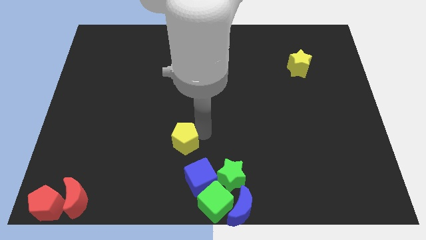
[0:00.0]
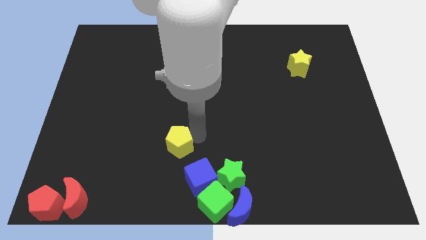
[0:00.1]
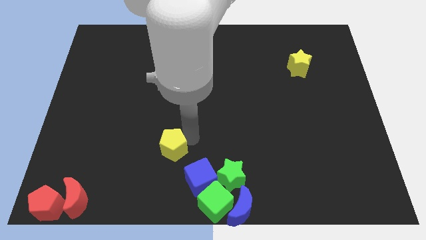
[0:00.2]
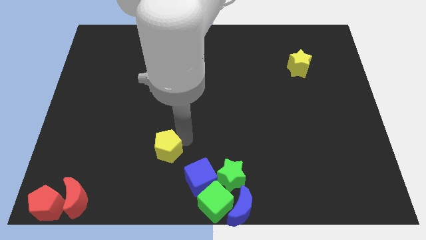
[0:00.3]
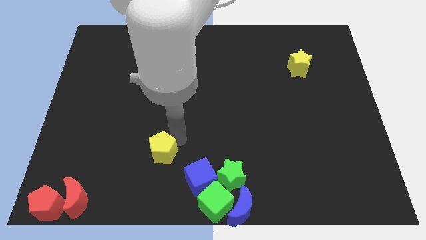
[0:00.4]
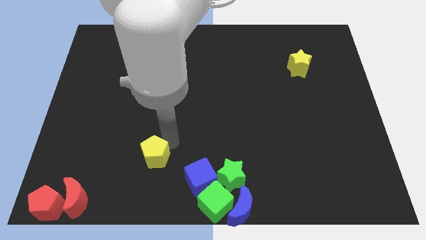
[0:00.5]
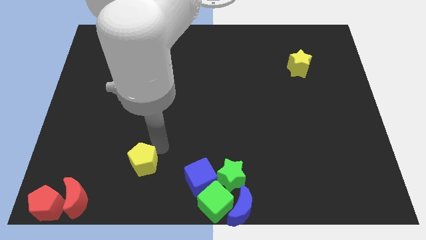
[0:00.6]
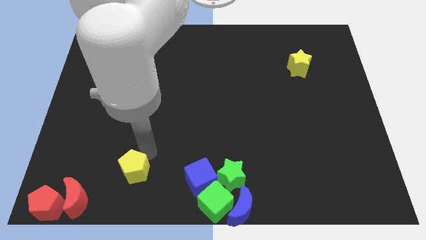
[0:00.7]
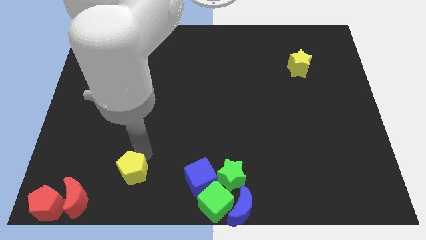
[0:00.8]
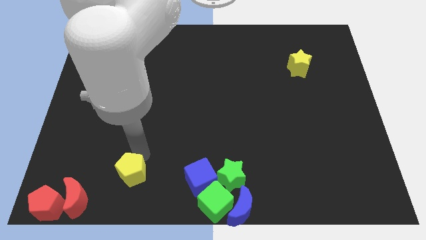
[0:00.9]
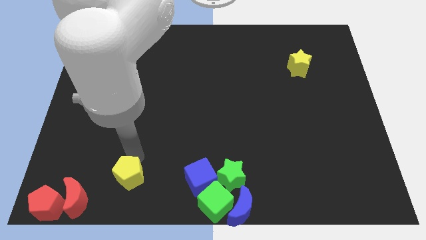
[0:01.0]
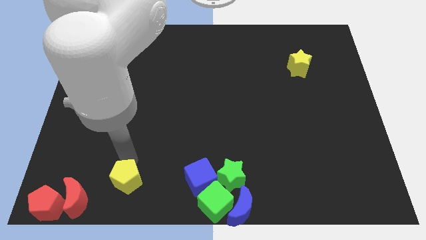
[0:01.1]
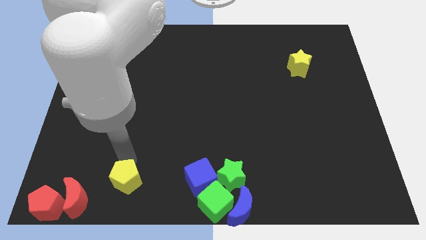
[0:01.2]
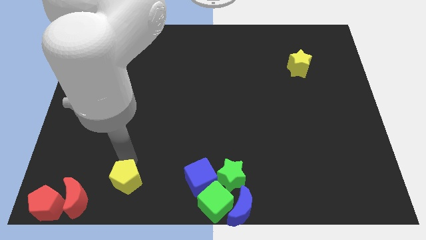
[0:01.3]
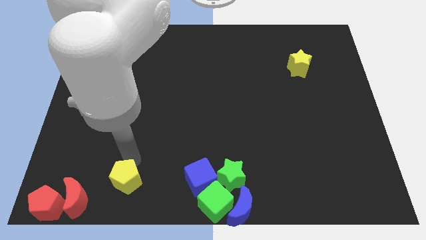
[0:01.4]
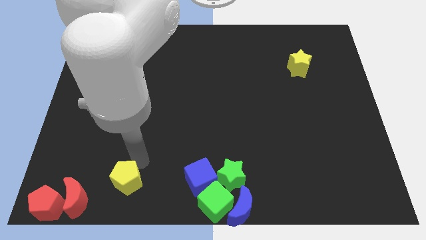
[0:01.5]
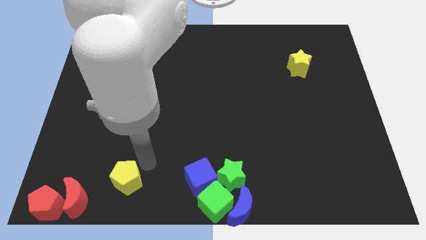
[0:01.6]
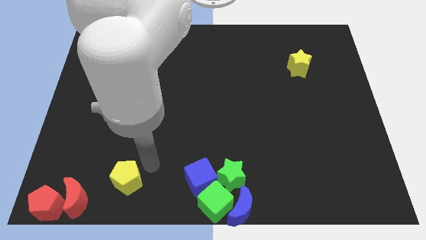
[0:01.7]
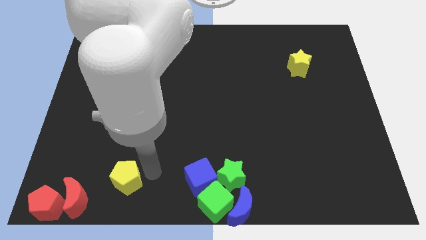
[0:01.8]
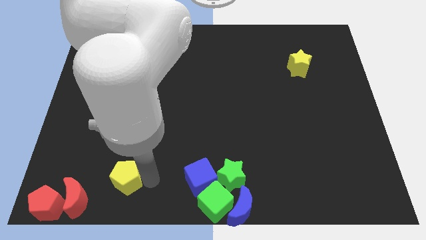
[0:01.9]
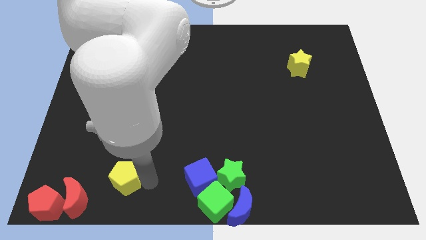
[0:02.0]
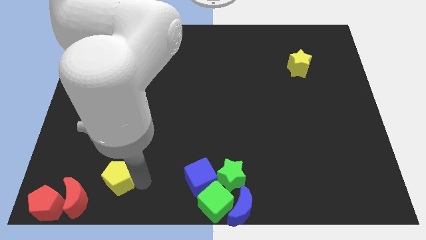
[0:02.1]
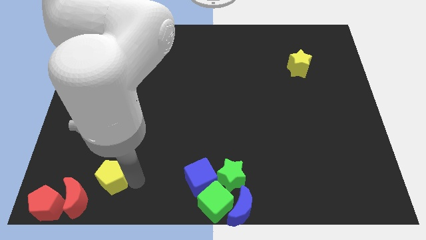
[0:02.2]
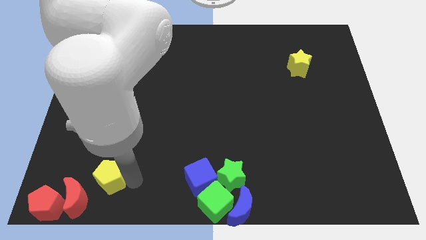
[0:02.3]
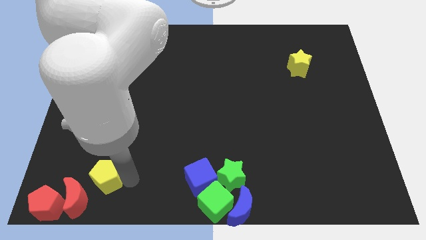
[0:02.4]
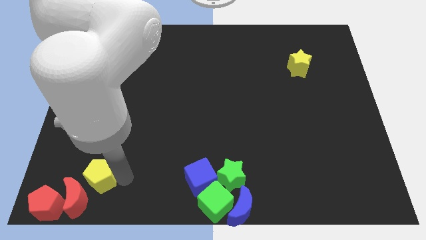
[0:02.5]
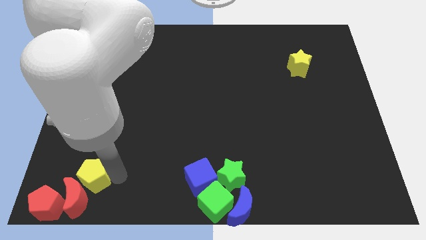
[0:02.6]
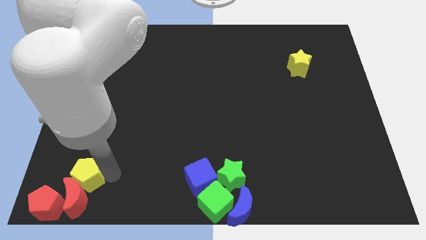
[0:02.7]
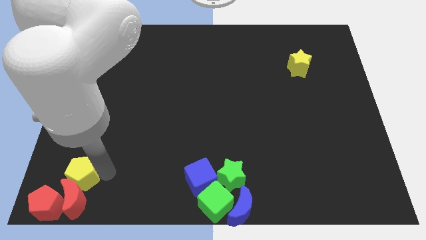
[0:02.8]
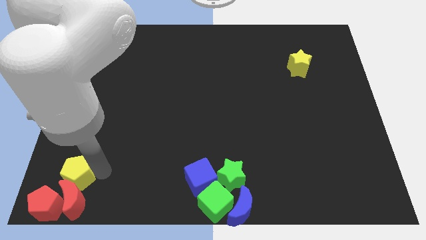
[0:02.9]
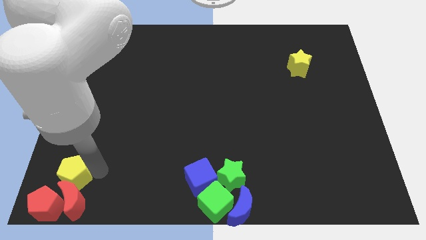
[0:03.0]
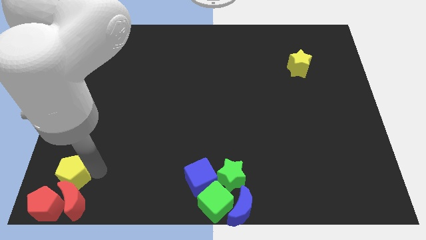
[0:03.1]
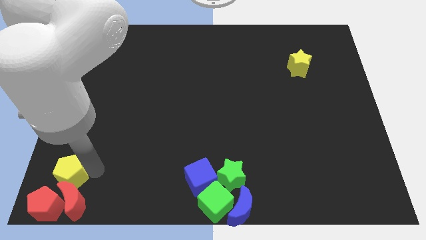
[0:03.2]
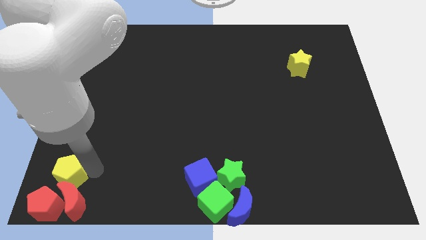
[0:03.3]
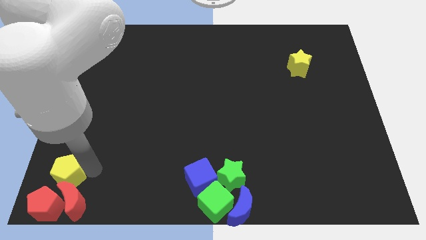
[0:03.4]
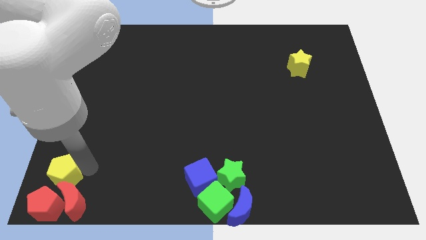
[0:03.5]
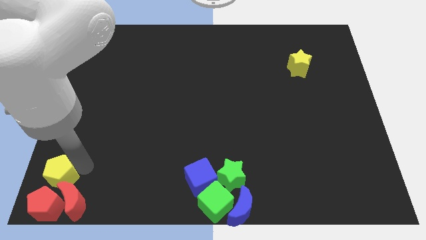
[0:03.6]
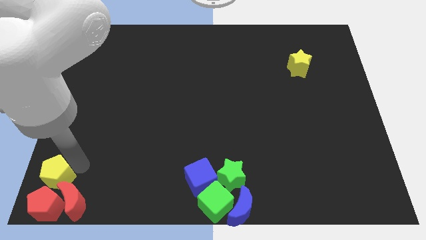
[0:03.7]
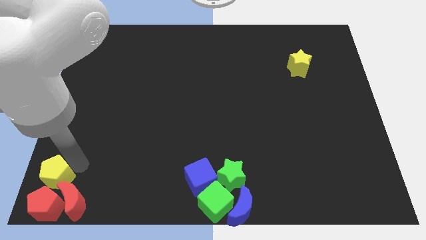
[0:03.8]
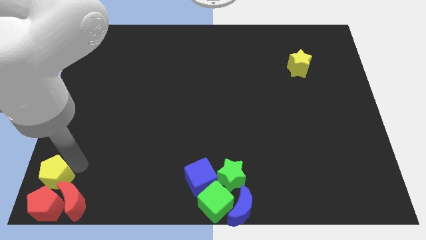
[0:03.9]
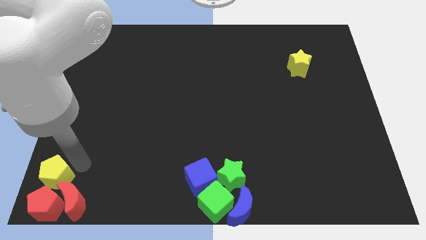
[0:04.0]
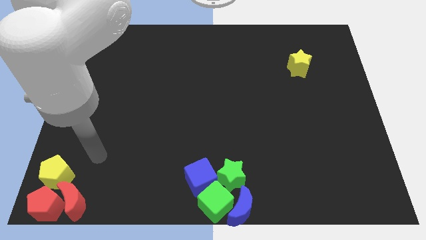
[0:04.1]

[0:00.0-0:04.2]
add yellow pentagon into red blocks

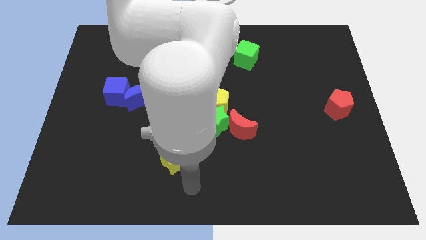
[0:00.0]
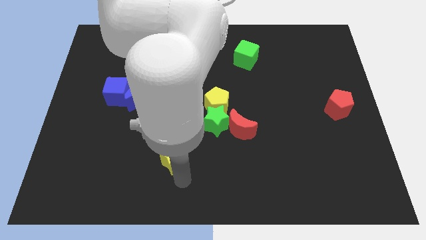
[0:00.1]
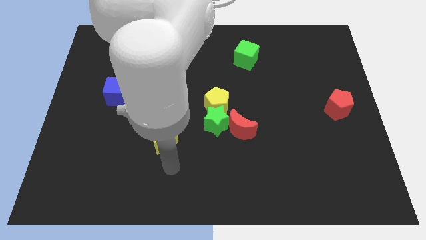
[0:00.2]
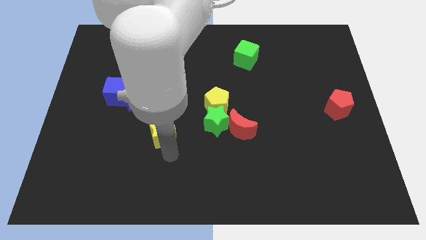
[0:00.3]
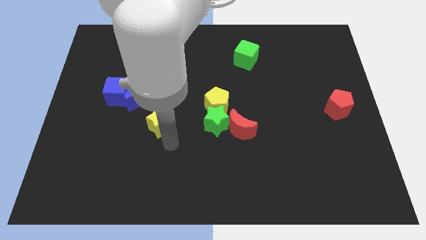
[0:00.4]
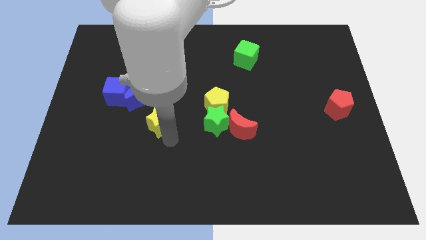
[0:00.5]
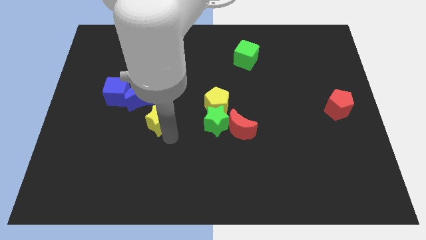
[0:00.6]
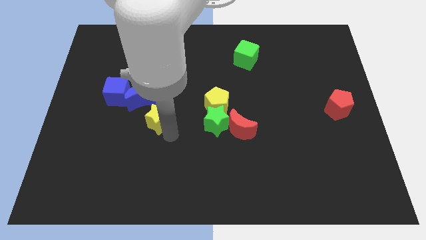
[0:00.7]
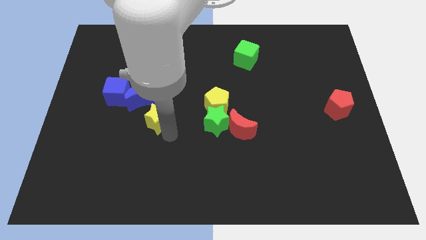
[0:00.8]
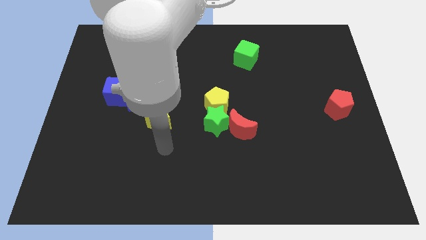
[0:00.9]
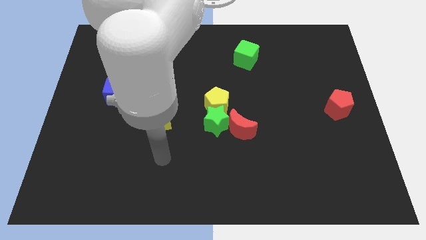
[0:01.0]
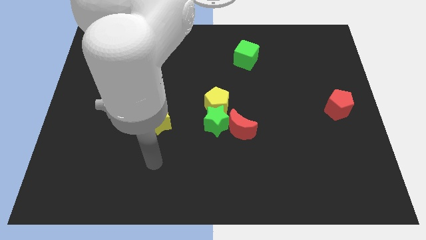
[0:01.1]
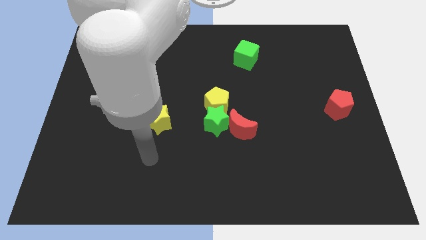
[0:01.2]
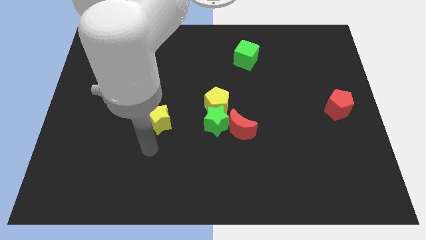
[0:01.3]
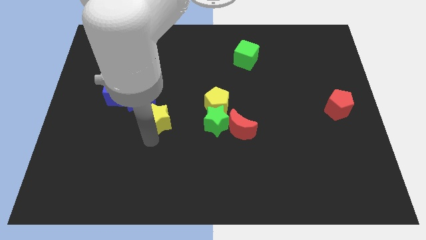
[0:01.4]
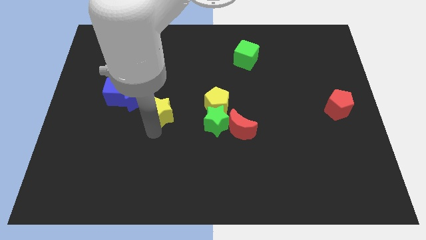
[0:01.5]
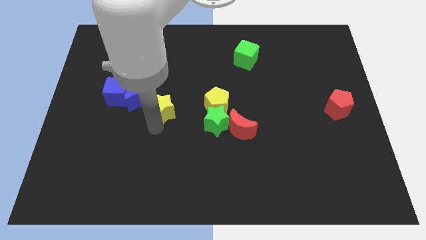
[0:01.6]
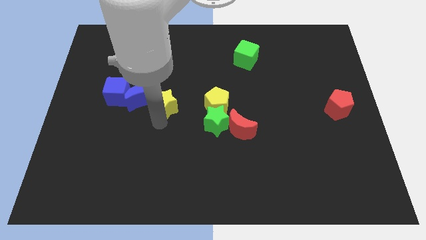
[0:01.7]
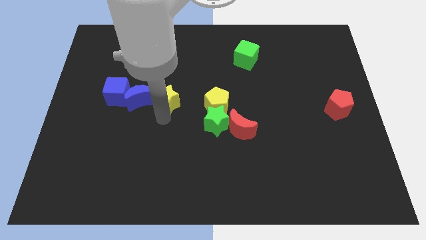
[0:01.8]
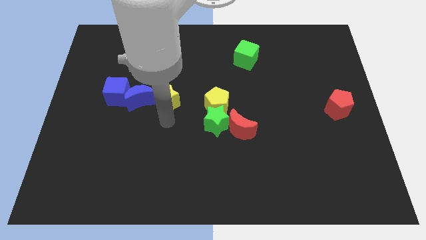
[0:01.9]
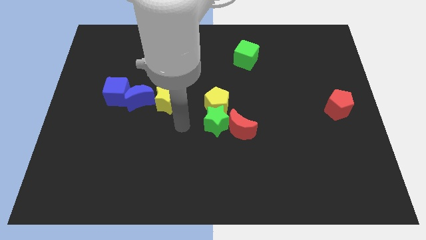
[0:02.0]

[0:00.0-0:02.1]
move yellow star right to the blue crescent

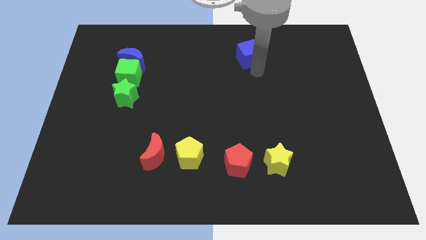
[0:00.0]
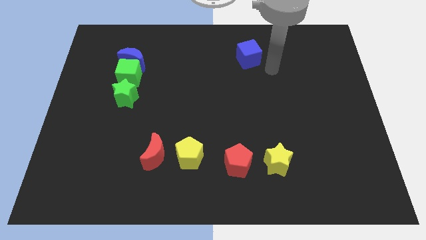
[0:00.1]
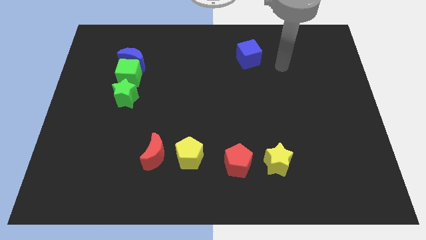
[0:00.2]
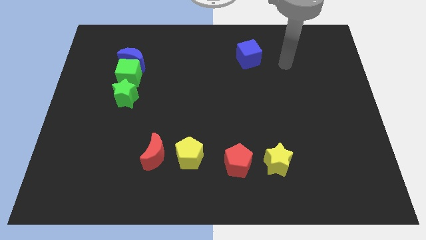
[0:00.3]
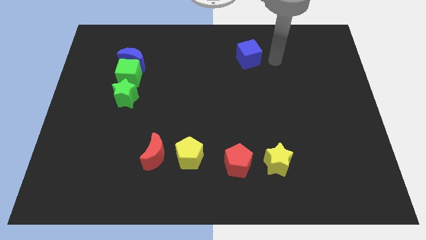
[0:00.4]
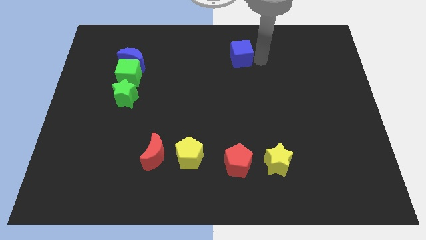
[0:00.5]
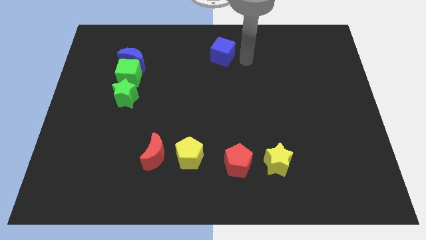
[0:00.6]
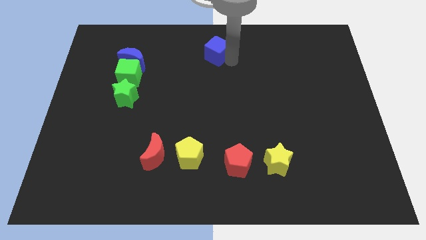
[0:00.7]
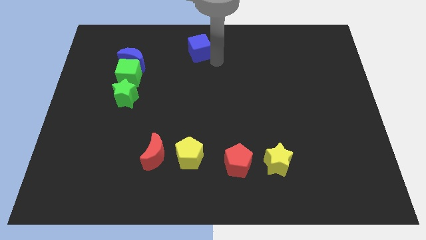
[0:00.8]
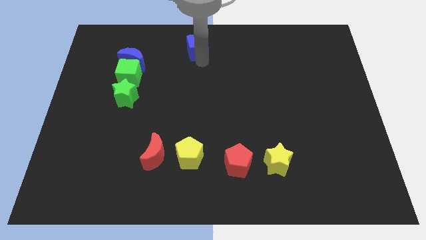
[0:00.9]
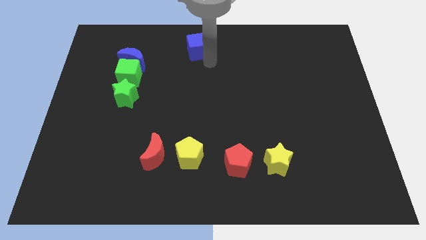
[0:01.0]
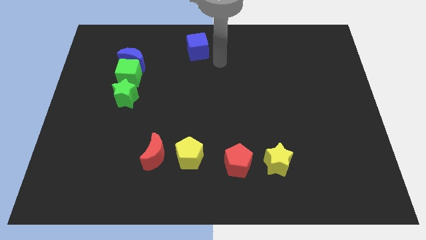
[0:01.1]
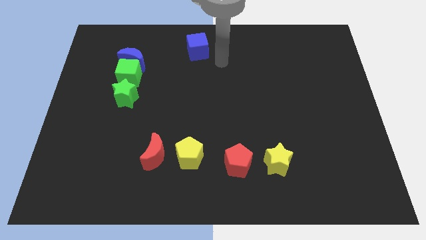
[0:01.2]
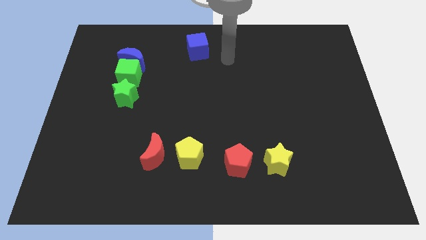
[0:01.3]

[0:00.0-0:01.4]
put the blue cube vertically above the yellow pentagon

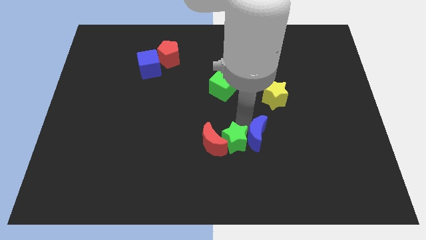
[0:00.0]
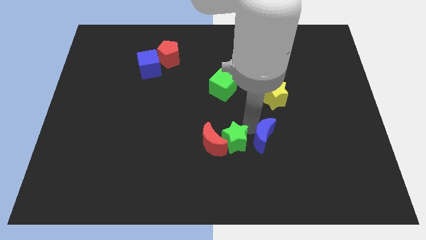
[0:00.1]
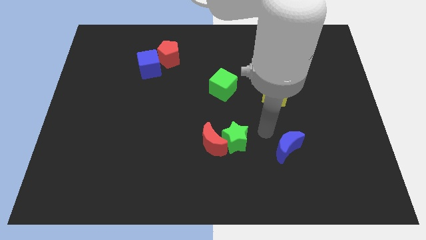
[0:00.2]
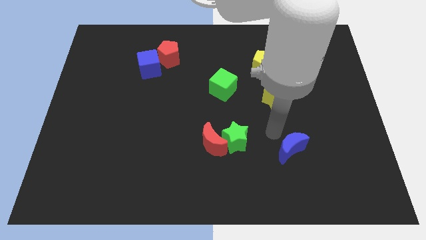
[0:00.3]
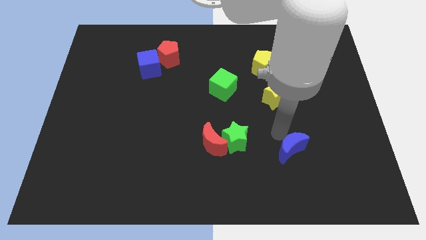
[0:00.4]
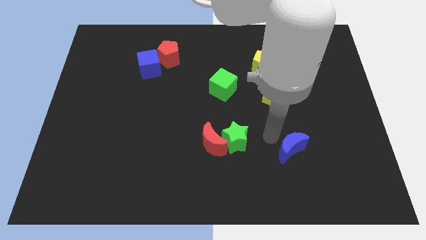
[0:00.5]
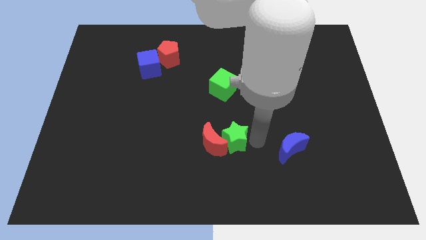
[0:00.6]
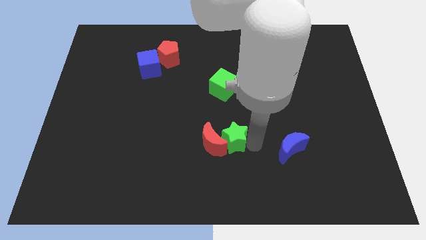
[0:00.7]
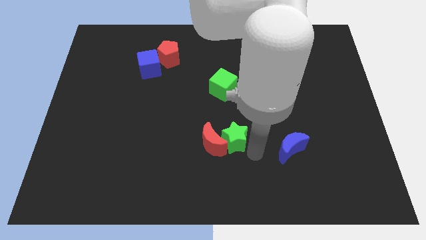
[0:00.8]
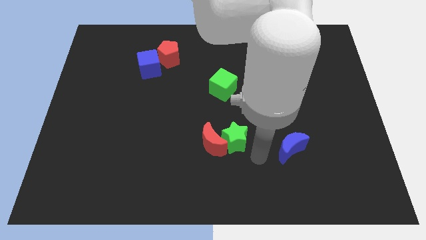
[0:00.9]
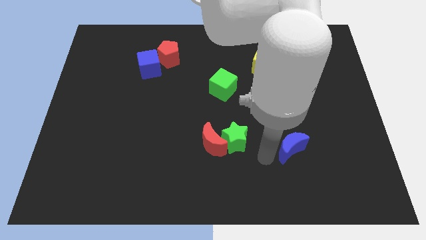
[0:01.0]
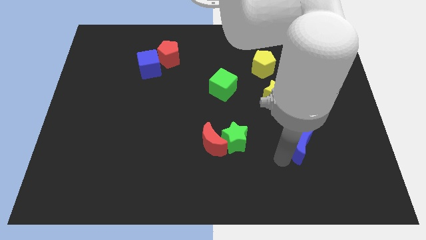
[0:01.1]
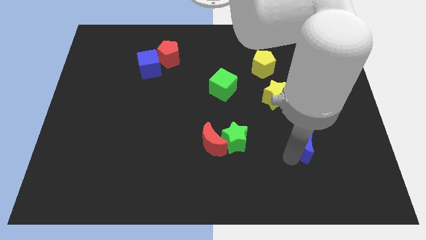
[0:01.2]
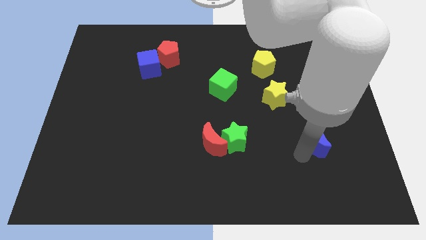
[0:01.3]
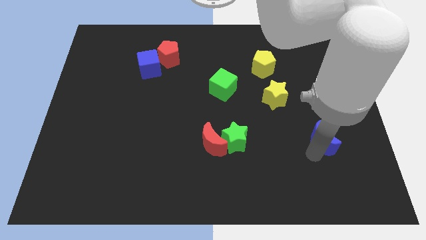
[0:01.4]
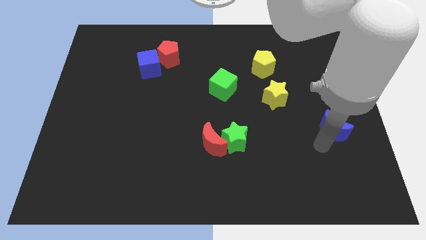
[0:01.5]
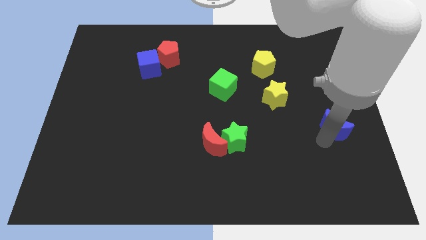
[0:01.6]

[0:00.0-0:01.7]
separate the blue crescent from the green star
